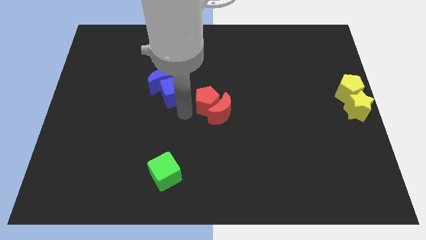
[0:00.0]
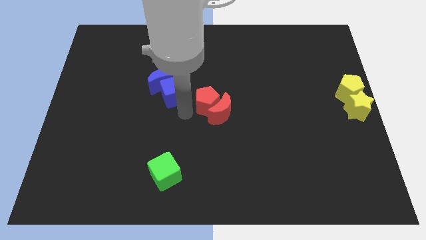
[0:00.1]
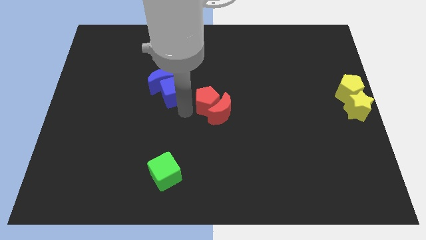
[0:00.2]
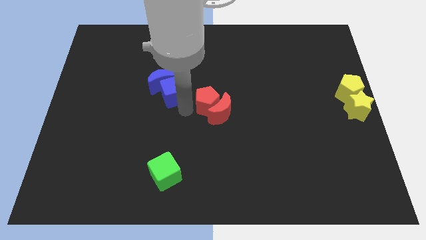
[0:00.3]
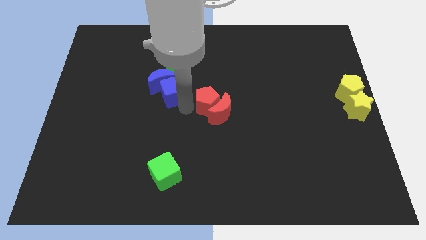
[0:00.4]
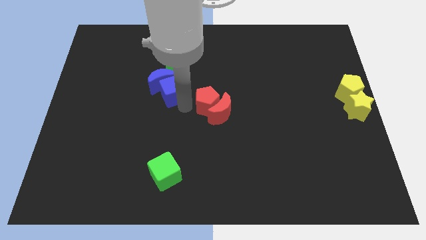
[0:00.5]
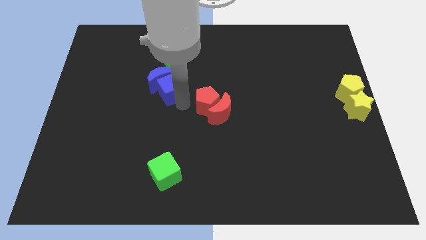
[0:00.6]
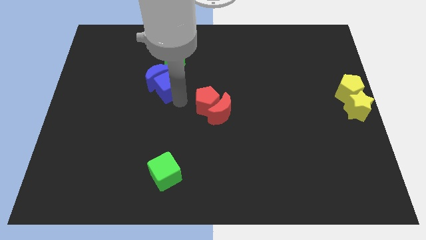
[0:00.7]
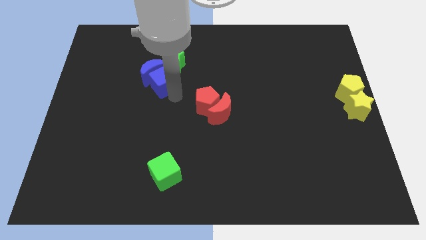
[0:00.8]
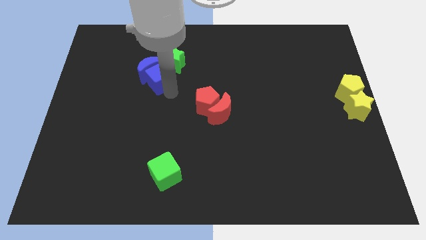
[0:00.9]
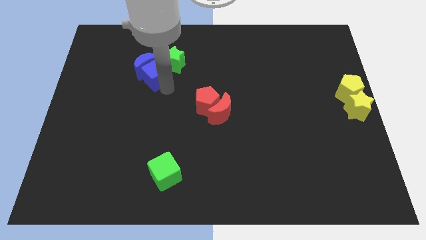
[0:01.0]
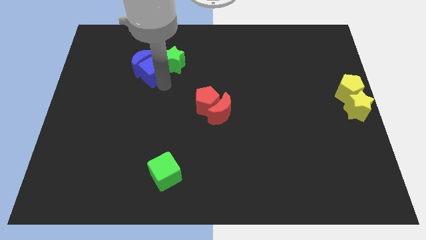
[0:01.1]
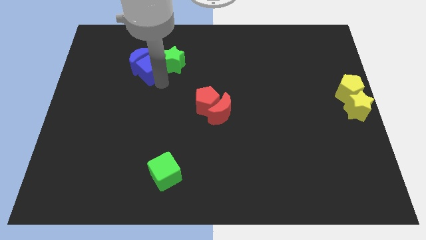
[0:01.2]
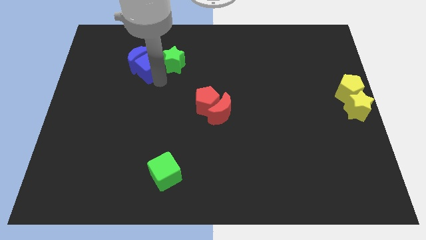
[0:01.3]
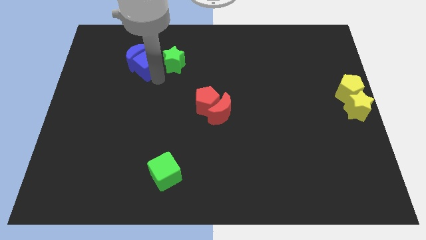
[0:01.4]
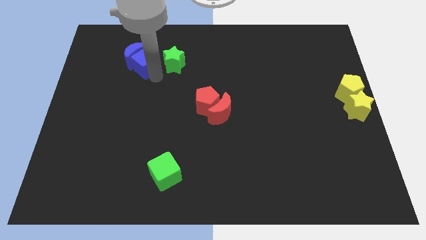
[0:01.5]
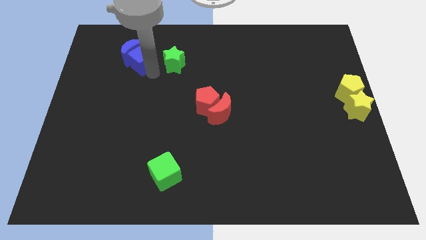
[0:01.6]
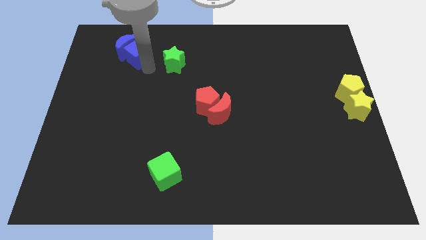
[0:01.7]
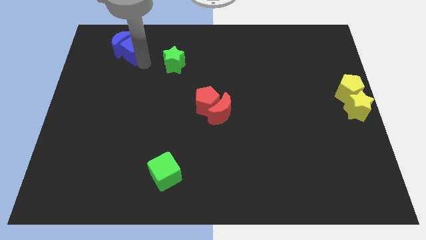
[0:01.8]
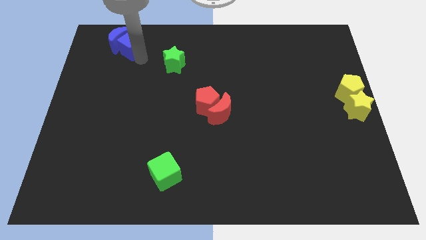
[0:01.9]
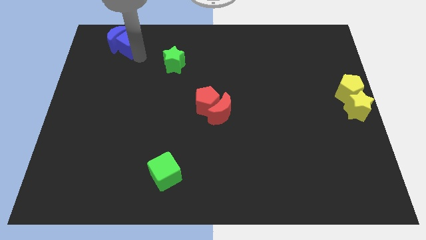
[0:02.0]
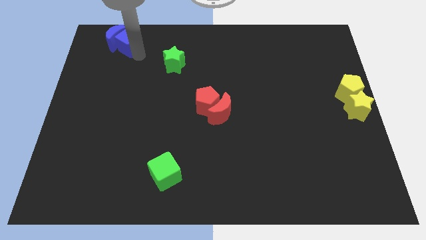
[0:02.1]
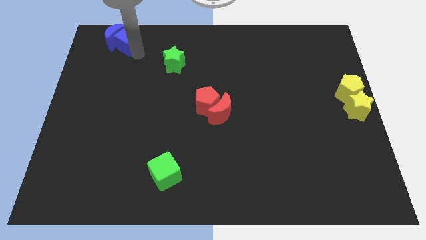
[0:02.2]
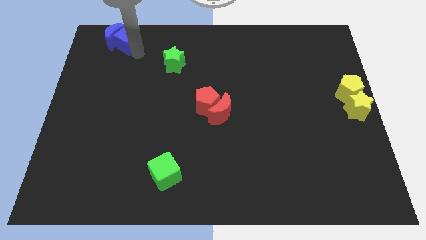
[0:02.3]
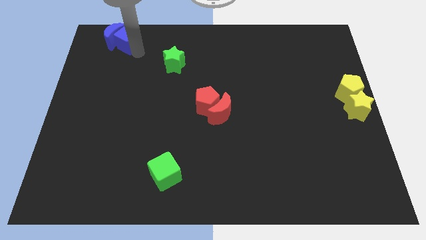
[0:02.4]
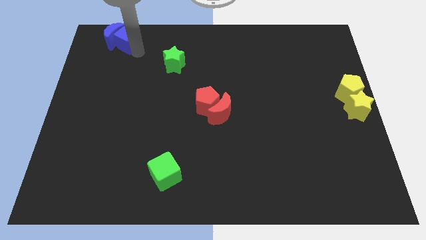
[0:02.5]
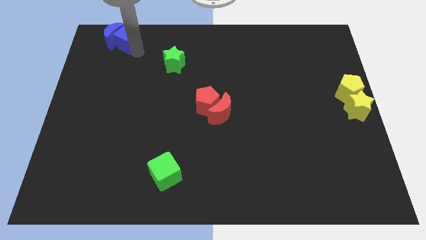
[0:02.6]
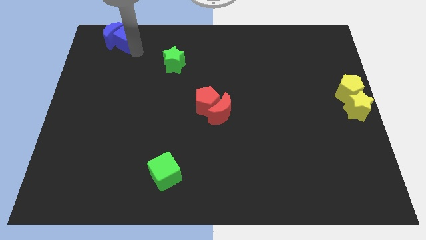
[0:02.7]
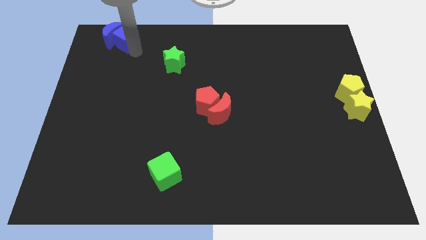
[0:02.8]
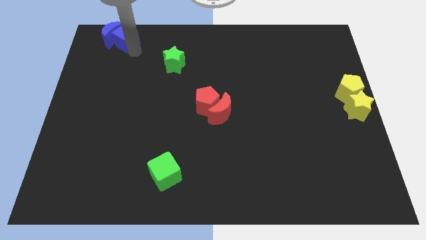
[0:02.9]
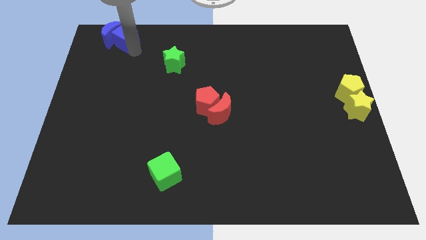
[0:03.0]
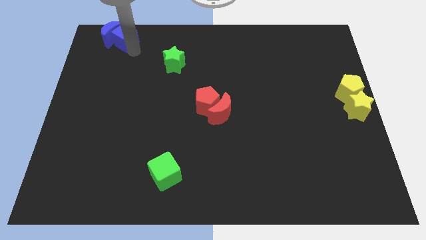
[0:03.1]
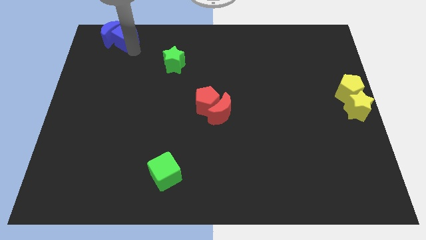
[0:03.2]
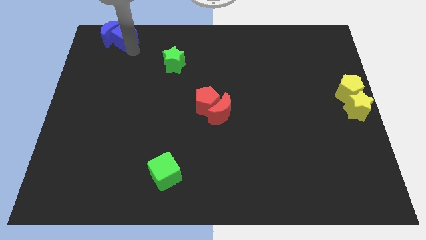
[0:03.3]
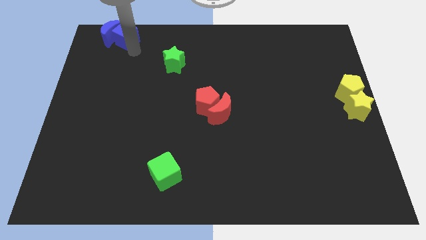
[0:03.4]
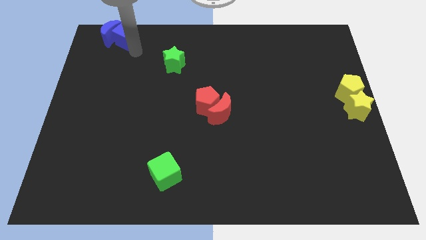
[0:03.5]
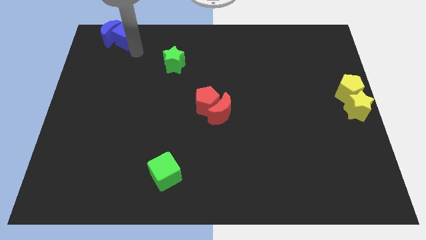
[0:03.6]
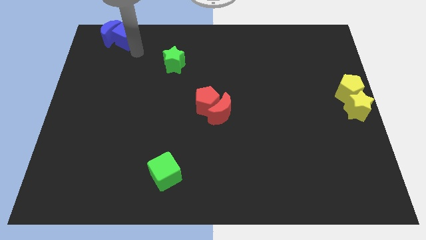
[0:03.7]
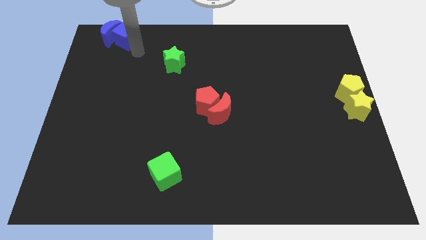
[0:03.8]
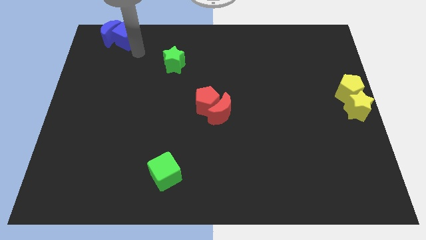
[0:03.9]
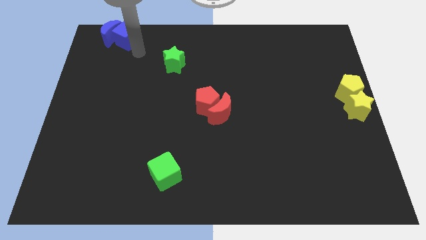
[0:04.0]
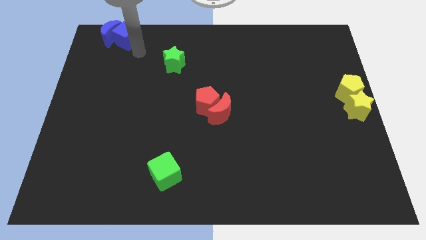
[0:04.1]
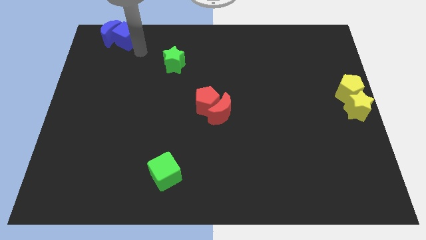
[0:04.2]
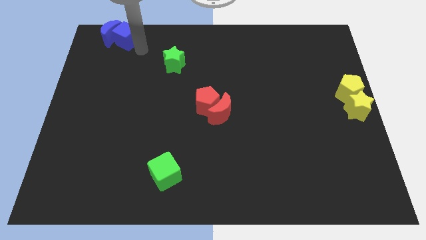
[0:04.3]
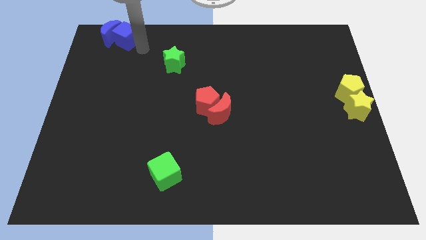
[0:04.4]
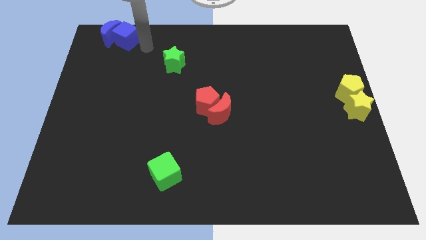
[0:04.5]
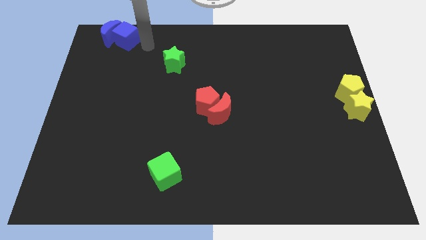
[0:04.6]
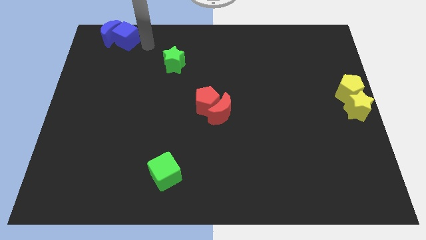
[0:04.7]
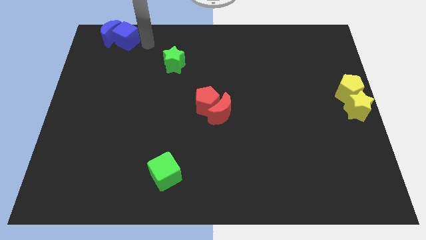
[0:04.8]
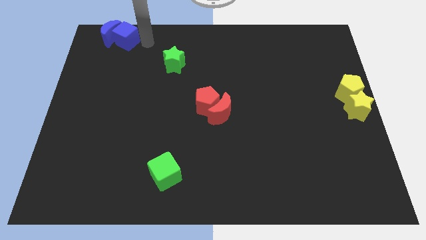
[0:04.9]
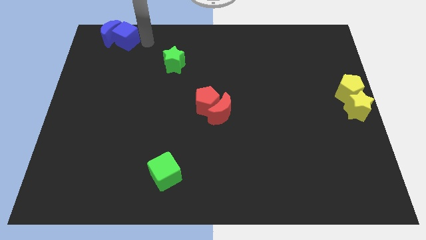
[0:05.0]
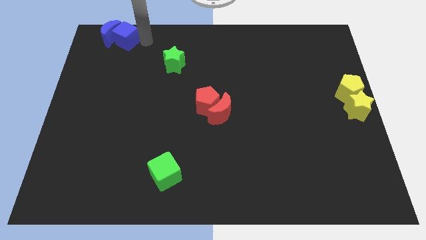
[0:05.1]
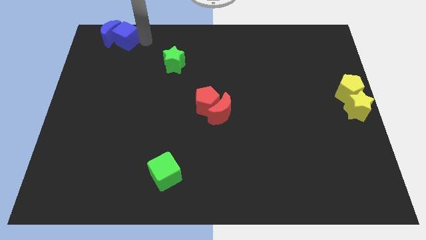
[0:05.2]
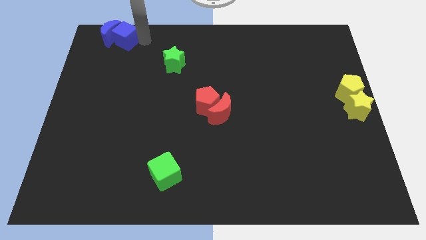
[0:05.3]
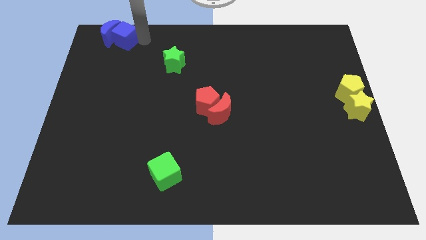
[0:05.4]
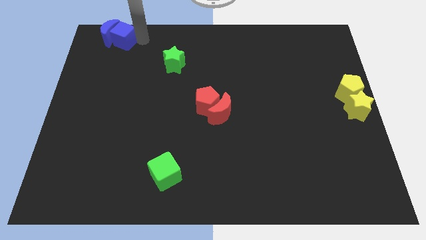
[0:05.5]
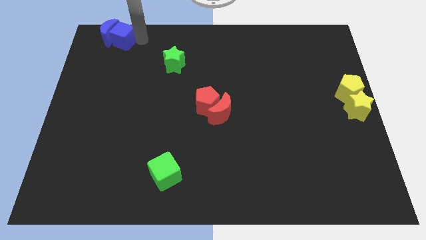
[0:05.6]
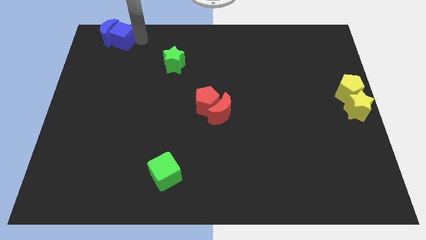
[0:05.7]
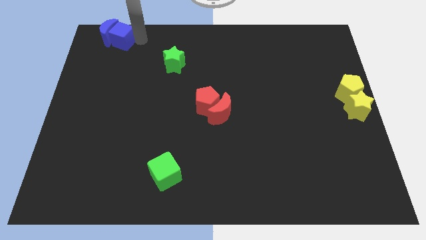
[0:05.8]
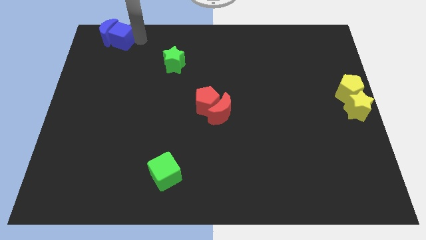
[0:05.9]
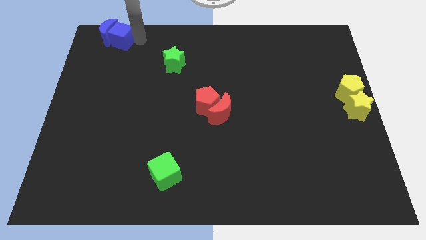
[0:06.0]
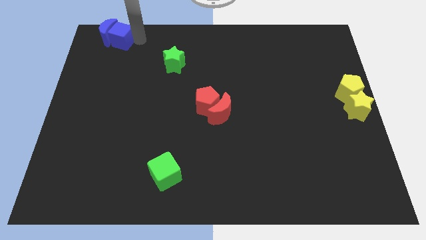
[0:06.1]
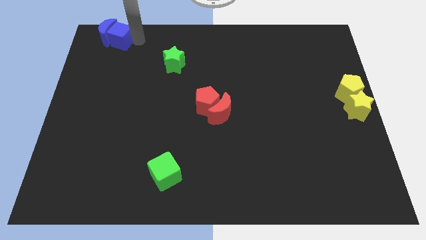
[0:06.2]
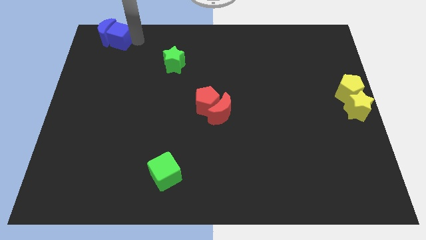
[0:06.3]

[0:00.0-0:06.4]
push the blue cube into the blue half moon to the top left corner of the board

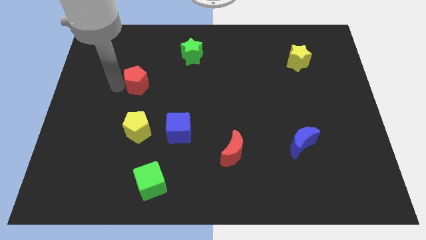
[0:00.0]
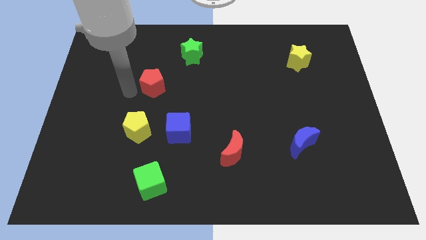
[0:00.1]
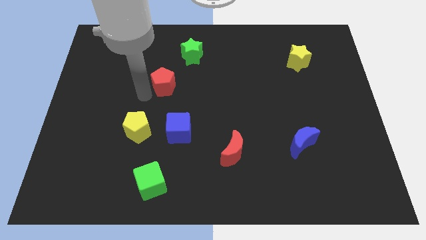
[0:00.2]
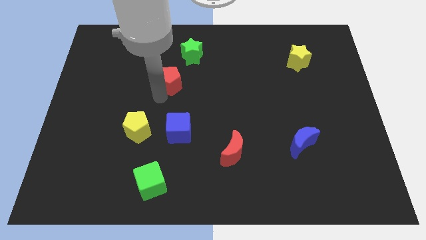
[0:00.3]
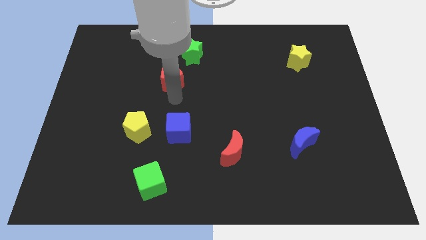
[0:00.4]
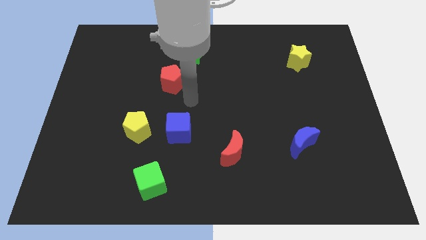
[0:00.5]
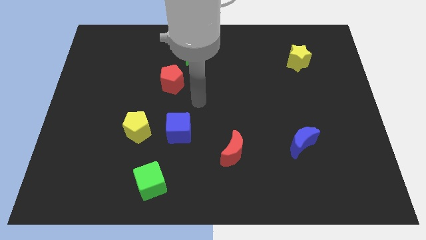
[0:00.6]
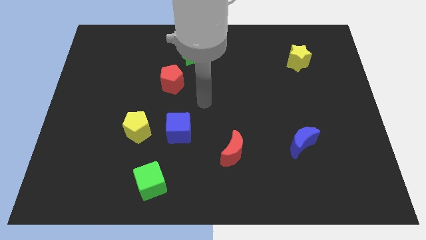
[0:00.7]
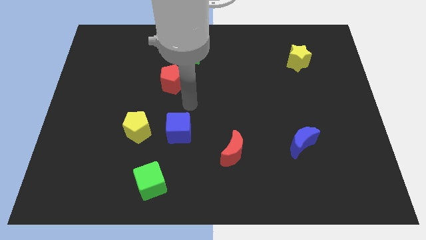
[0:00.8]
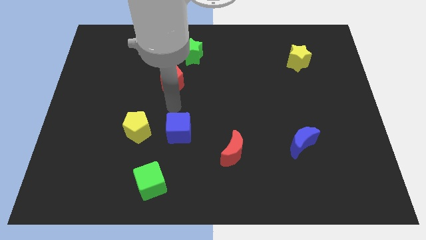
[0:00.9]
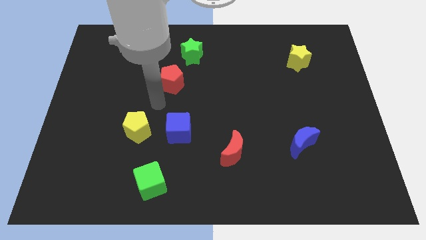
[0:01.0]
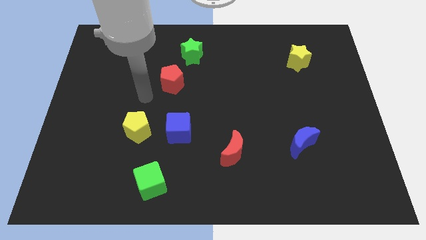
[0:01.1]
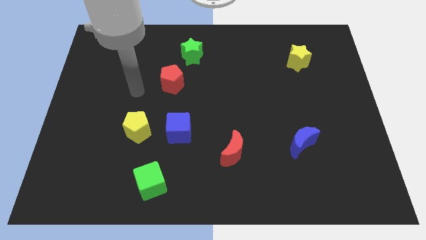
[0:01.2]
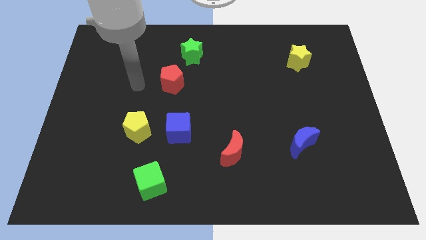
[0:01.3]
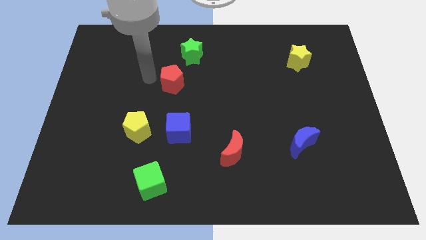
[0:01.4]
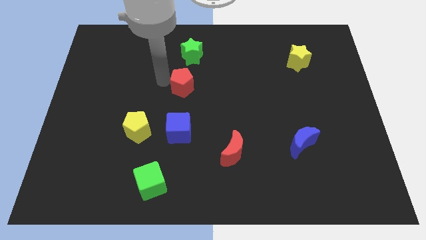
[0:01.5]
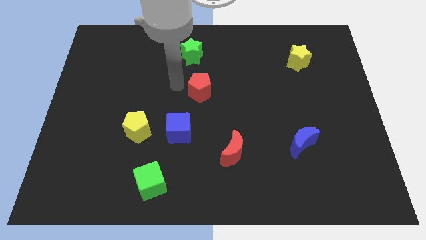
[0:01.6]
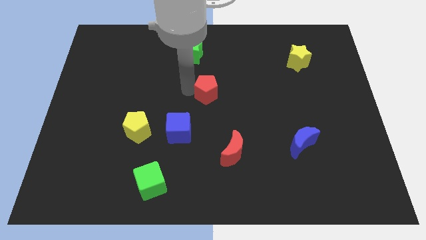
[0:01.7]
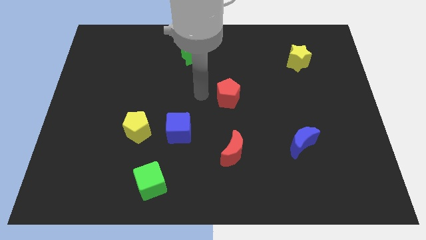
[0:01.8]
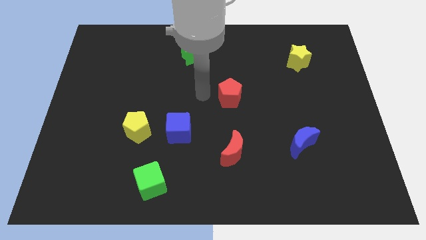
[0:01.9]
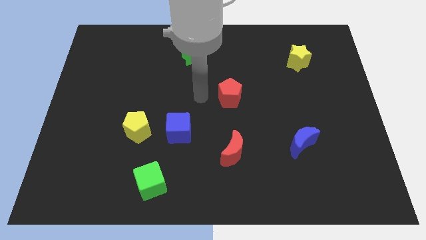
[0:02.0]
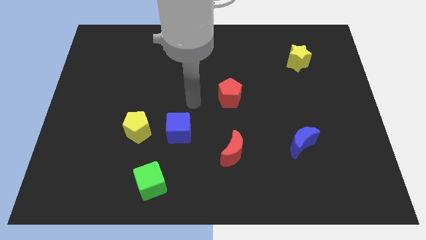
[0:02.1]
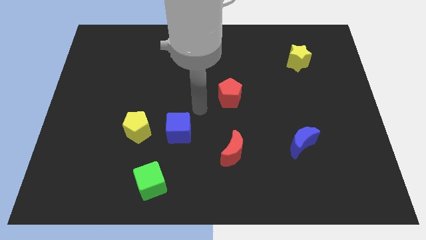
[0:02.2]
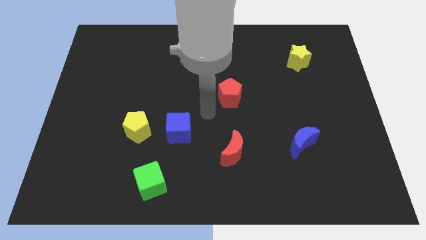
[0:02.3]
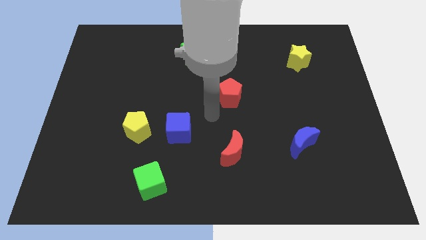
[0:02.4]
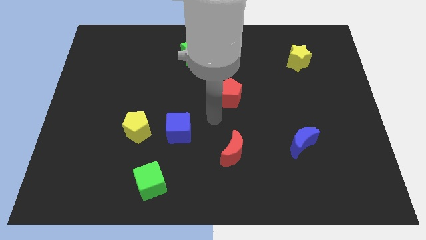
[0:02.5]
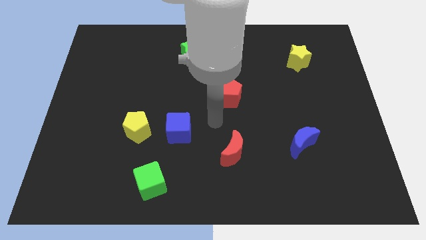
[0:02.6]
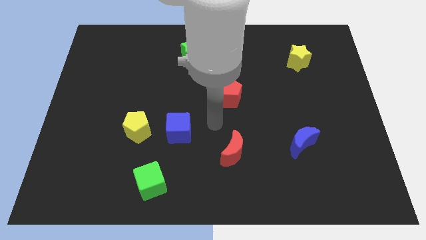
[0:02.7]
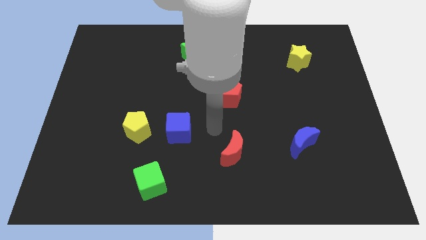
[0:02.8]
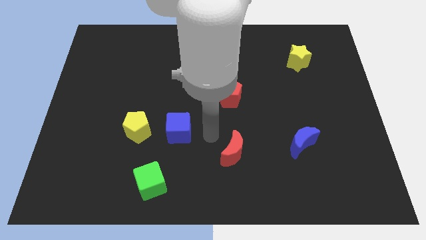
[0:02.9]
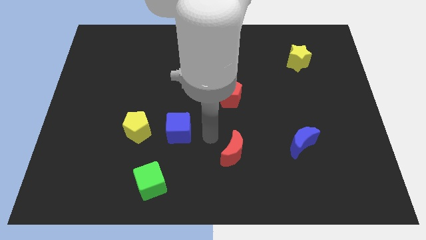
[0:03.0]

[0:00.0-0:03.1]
move the red pentagon on the top of the red moon
